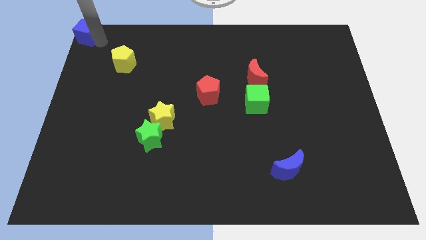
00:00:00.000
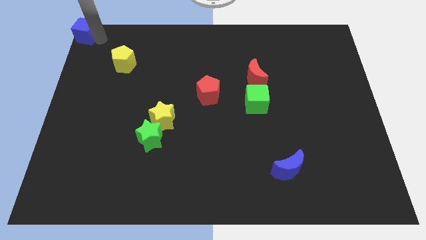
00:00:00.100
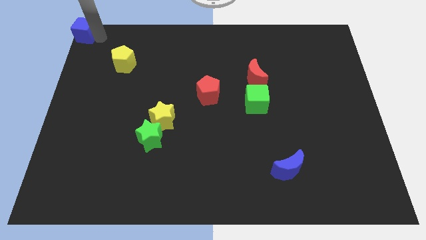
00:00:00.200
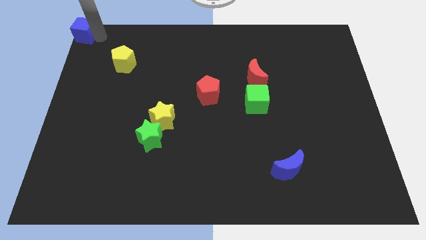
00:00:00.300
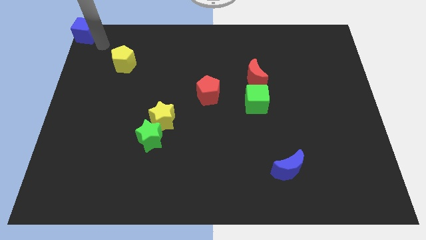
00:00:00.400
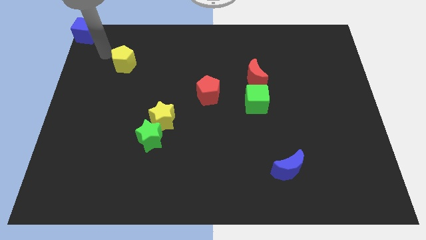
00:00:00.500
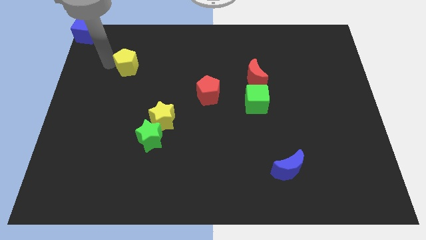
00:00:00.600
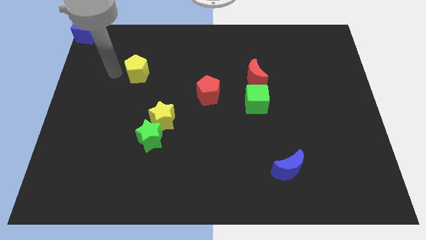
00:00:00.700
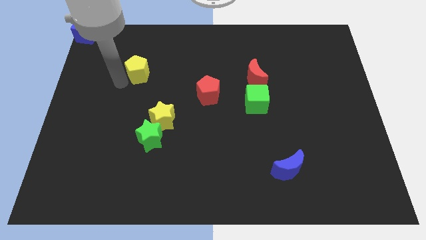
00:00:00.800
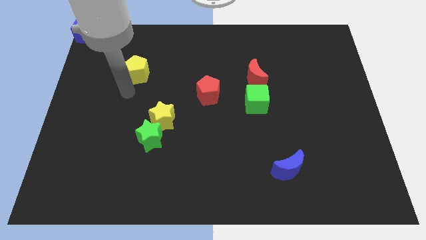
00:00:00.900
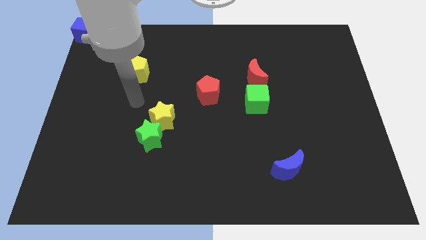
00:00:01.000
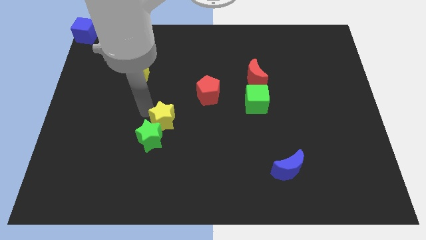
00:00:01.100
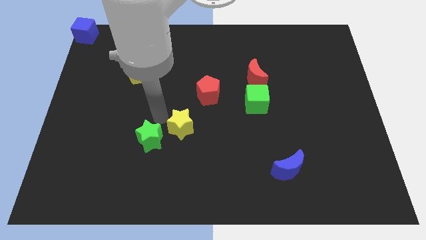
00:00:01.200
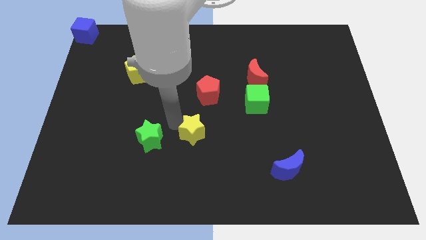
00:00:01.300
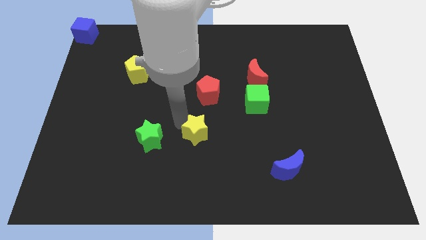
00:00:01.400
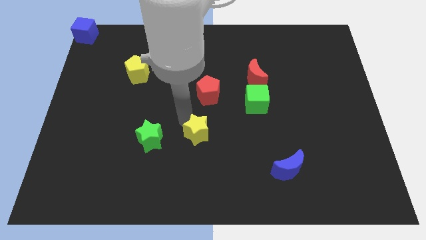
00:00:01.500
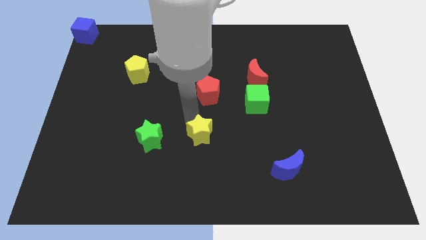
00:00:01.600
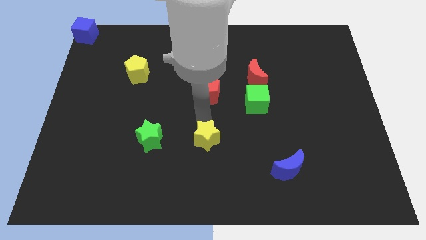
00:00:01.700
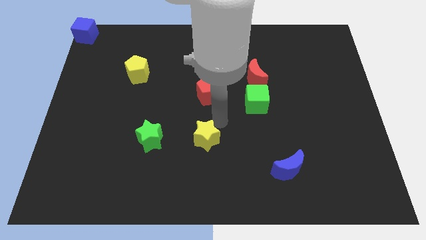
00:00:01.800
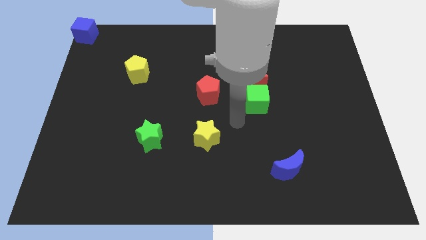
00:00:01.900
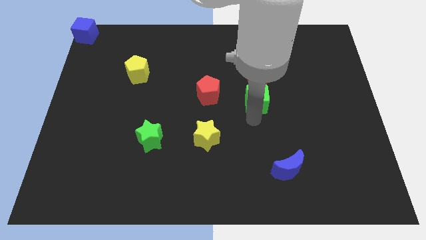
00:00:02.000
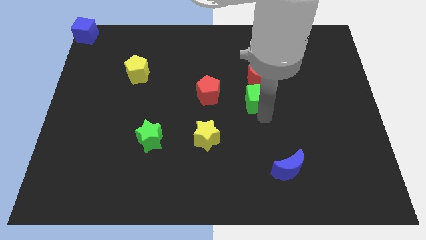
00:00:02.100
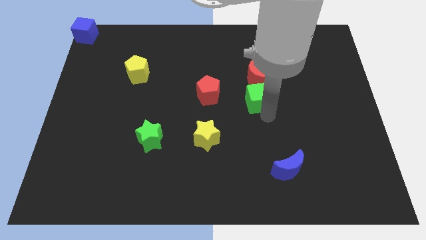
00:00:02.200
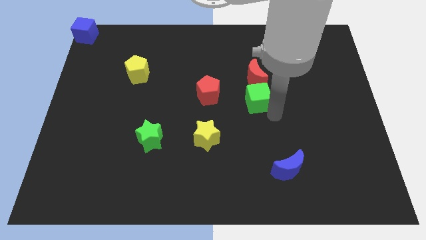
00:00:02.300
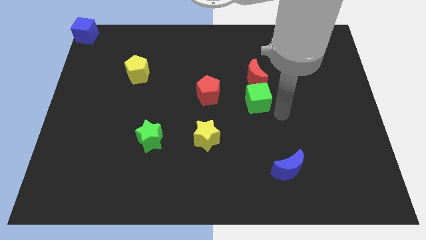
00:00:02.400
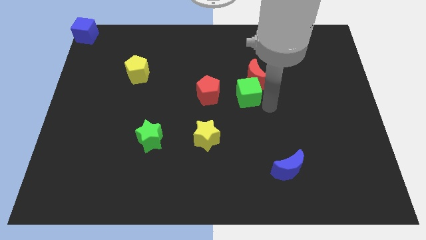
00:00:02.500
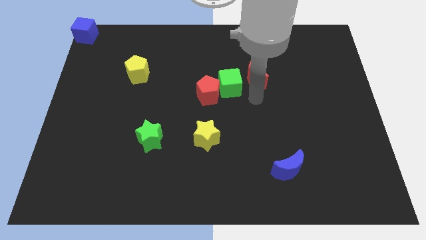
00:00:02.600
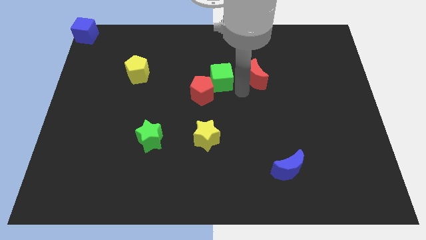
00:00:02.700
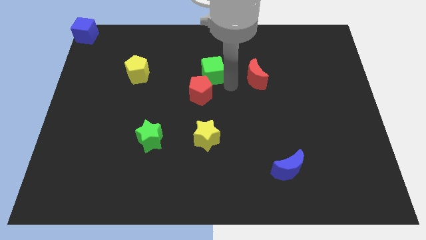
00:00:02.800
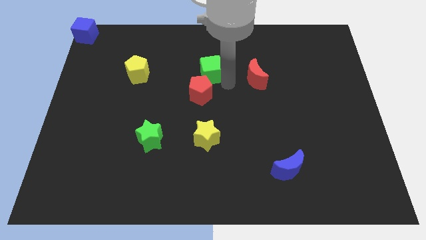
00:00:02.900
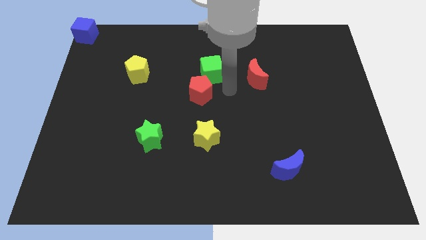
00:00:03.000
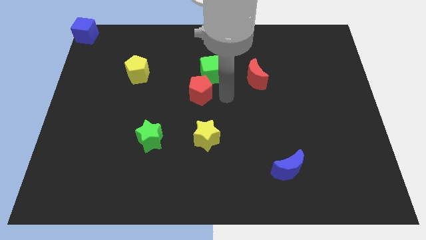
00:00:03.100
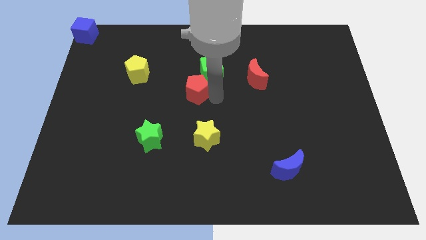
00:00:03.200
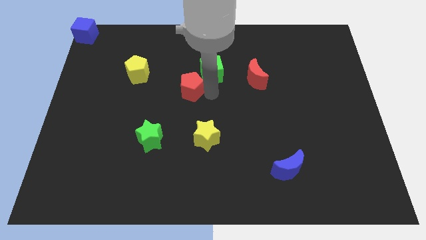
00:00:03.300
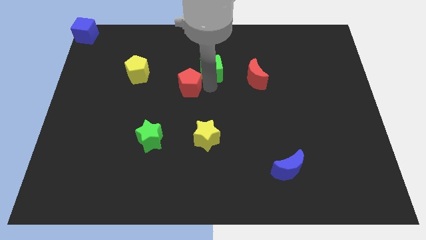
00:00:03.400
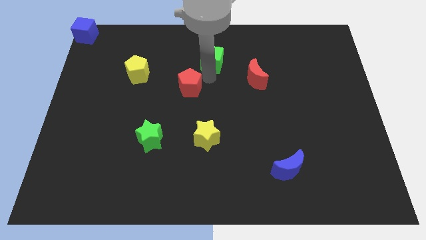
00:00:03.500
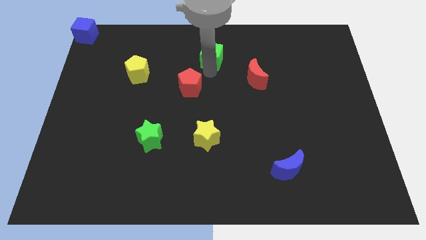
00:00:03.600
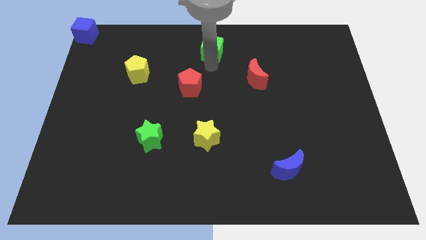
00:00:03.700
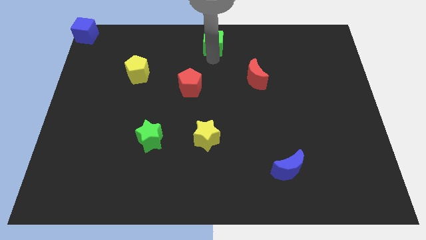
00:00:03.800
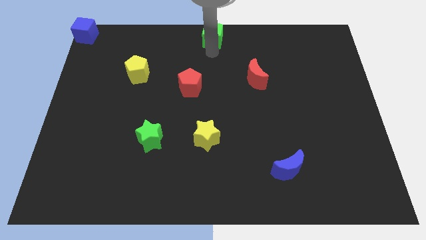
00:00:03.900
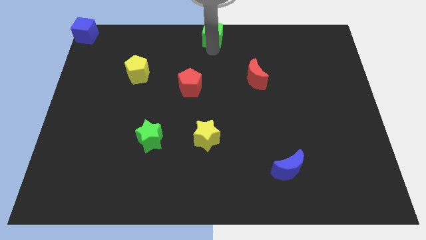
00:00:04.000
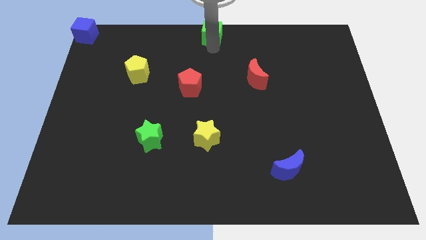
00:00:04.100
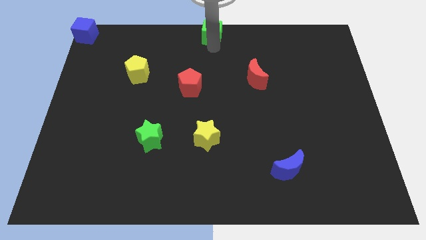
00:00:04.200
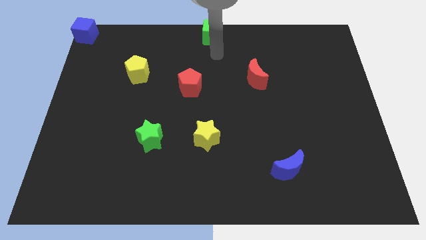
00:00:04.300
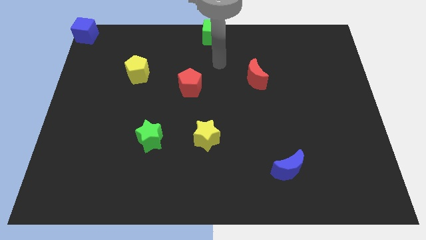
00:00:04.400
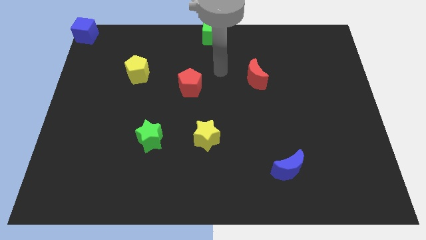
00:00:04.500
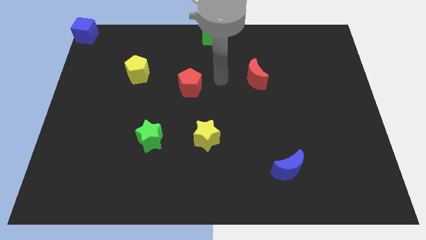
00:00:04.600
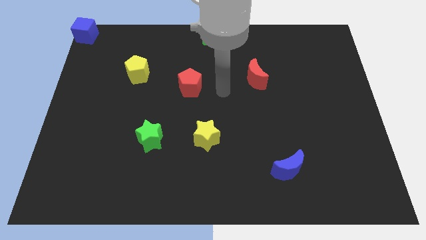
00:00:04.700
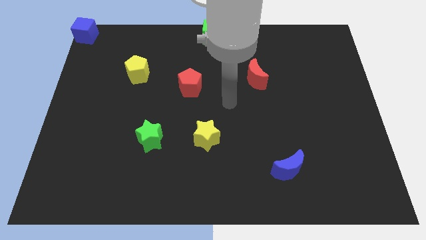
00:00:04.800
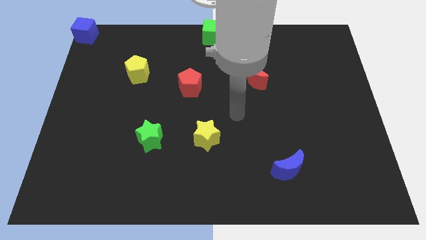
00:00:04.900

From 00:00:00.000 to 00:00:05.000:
push the green cube to the top center

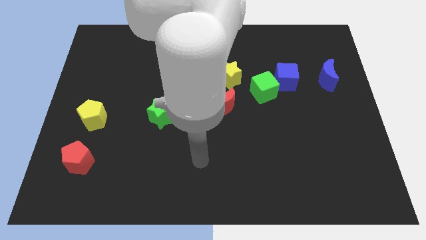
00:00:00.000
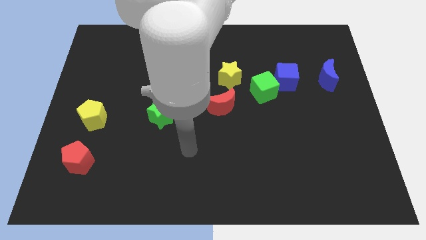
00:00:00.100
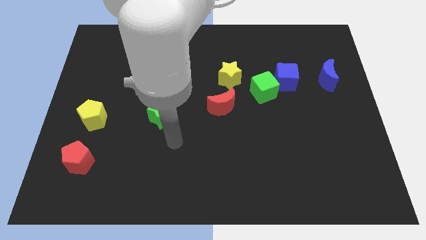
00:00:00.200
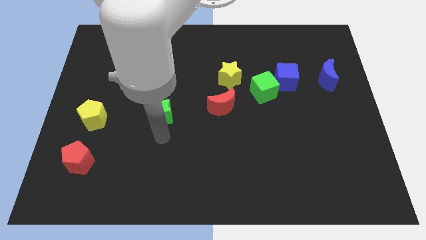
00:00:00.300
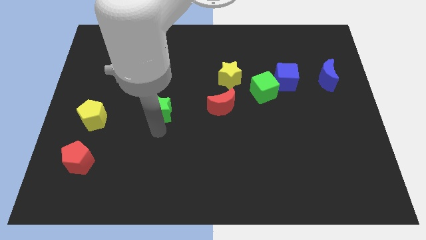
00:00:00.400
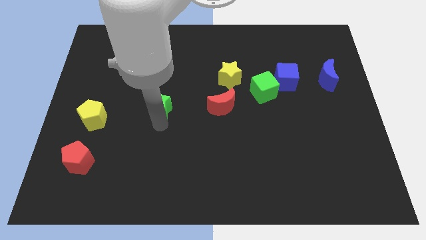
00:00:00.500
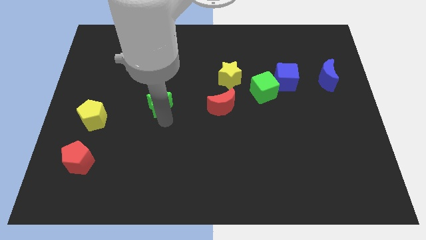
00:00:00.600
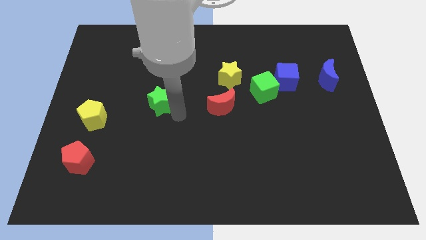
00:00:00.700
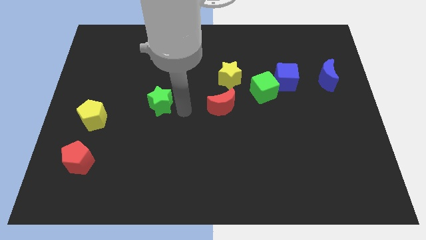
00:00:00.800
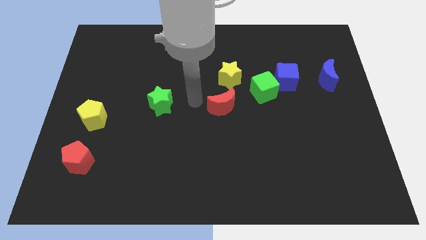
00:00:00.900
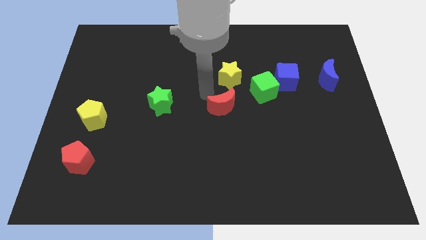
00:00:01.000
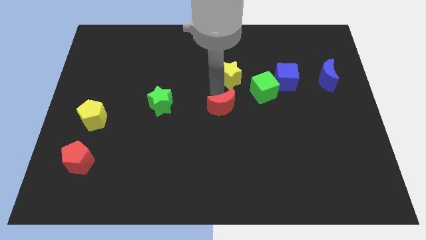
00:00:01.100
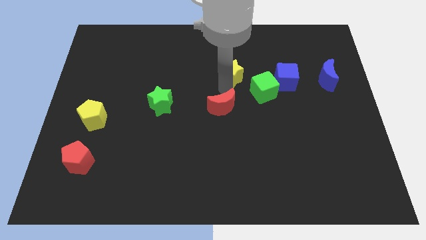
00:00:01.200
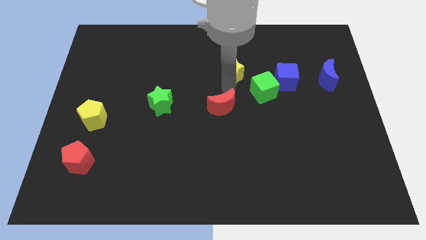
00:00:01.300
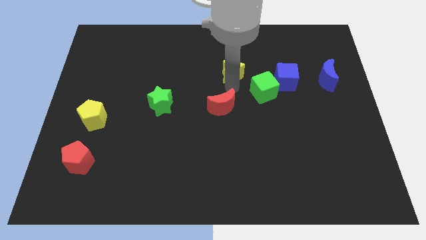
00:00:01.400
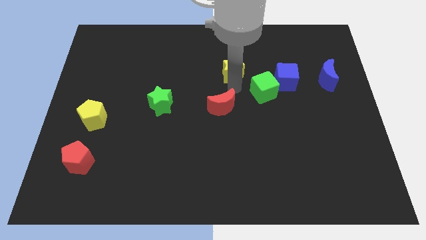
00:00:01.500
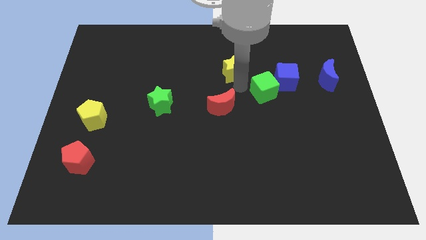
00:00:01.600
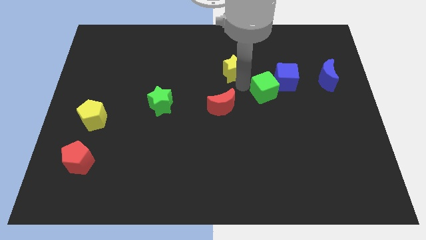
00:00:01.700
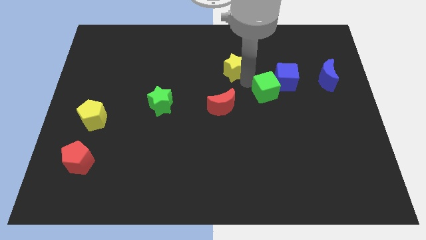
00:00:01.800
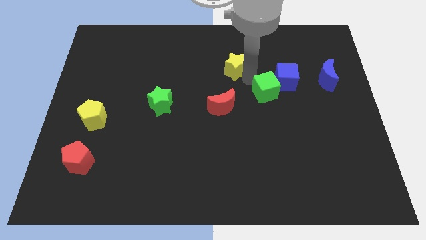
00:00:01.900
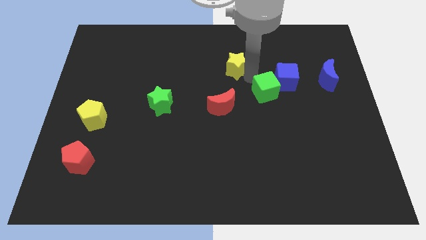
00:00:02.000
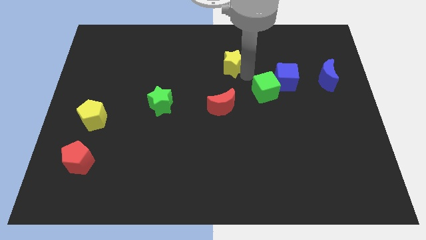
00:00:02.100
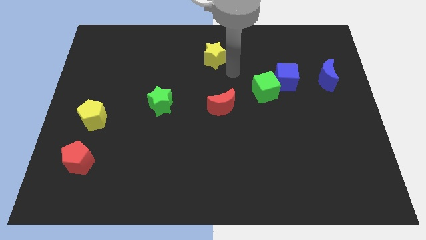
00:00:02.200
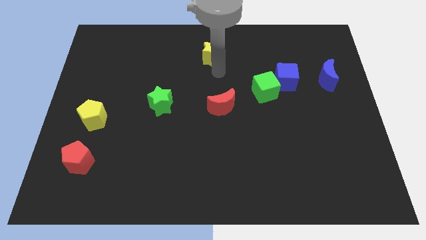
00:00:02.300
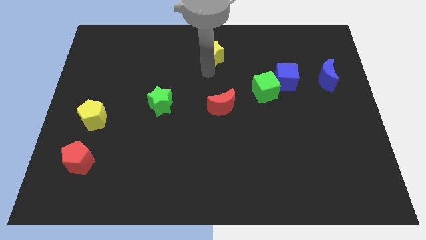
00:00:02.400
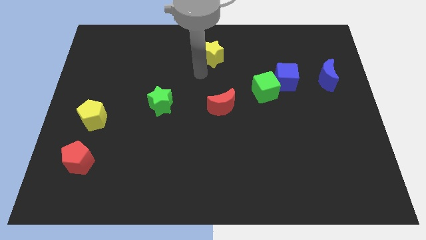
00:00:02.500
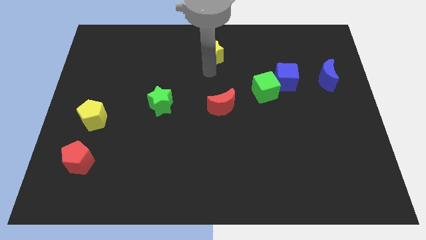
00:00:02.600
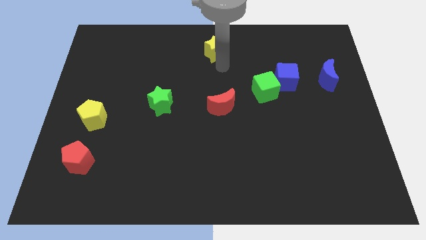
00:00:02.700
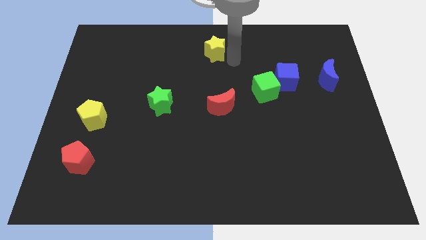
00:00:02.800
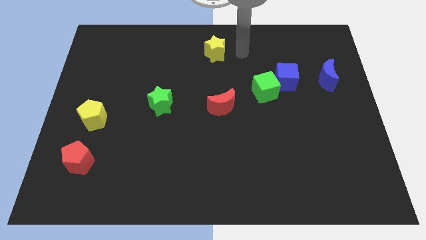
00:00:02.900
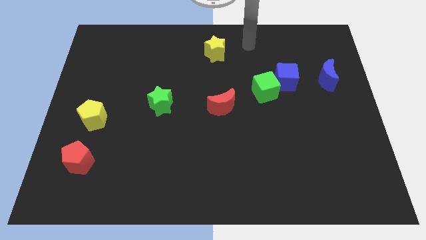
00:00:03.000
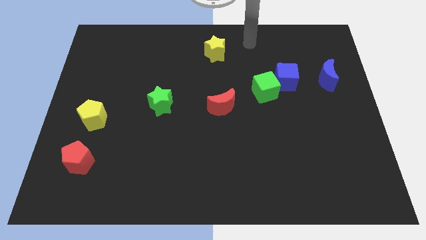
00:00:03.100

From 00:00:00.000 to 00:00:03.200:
place the yellow pentagon above the red moon

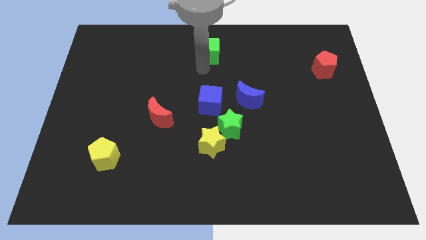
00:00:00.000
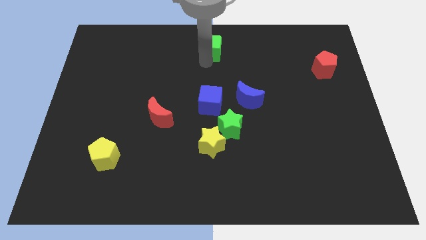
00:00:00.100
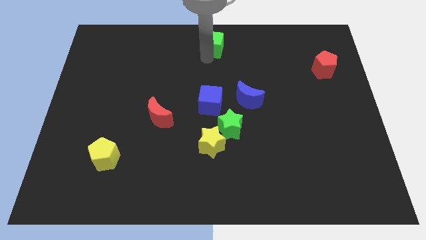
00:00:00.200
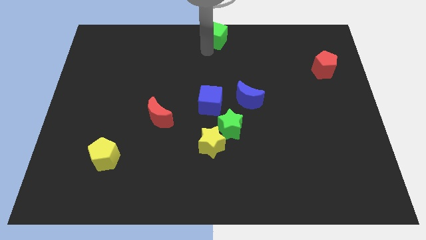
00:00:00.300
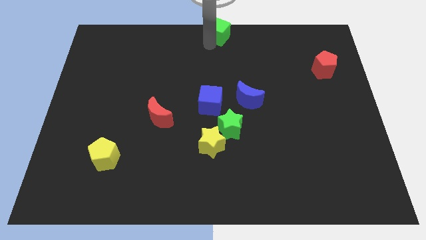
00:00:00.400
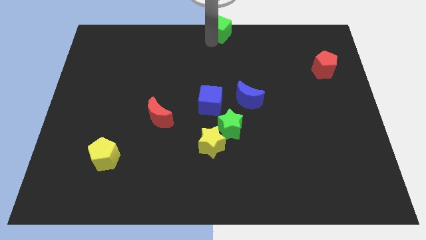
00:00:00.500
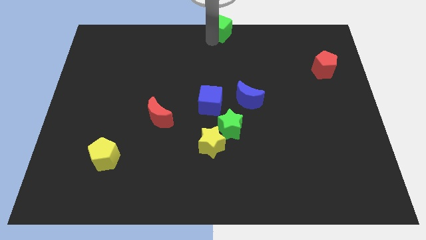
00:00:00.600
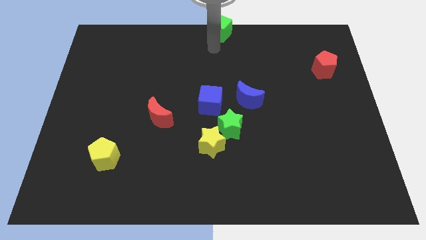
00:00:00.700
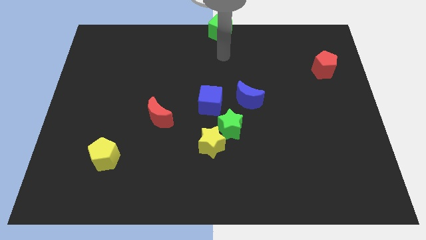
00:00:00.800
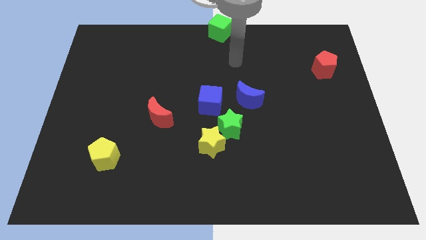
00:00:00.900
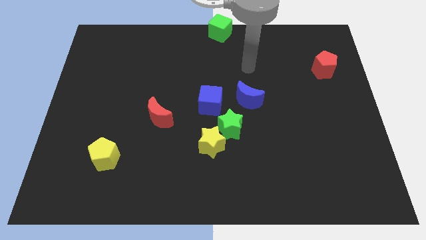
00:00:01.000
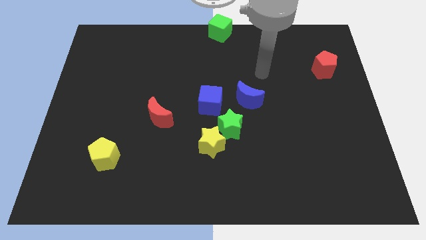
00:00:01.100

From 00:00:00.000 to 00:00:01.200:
place the green cube at the top center of the board
